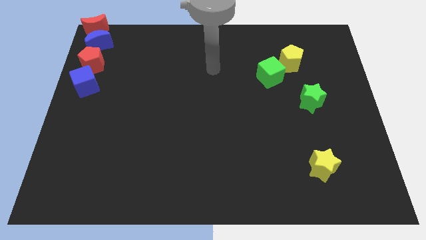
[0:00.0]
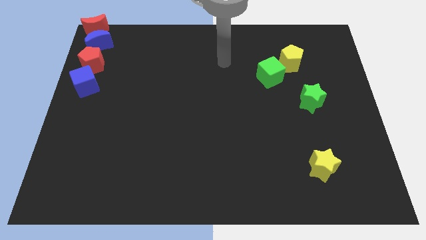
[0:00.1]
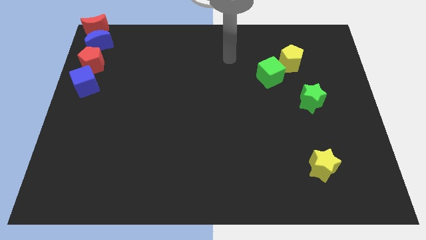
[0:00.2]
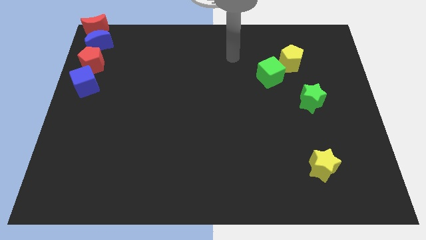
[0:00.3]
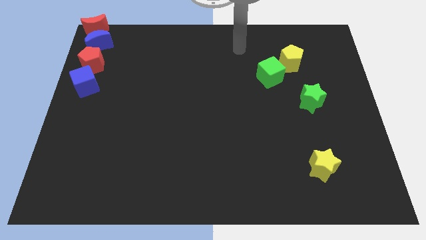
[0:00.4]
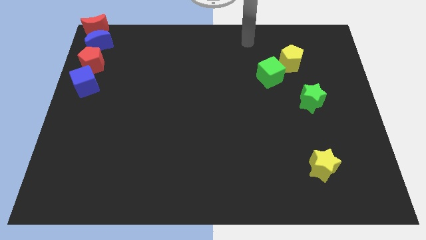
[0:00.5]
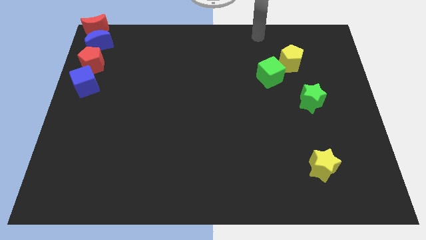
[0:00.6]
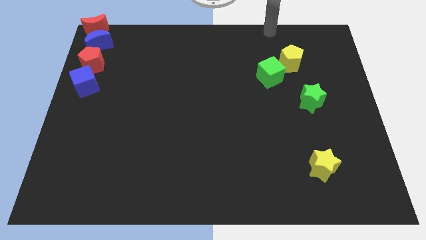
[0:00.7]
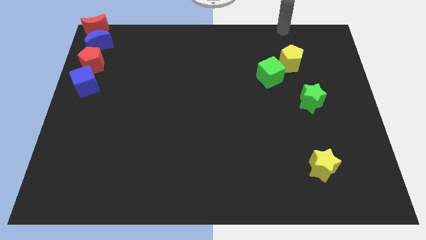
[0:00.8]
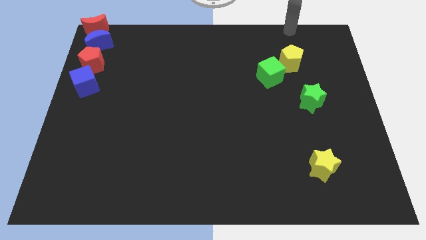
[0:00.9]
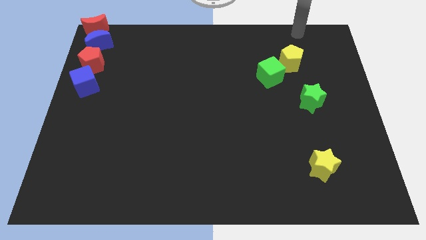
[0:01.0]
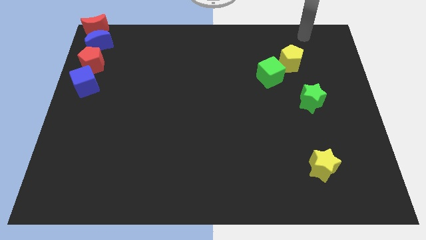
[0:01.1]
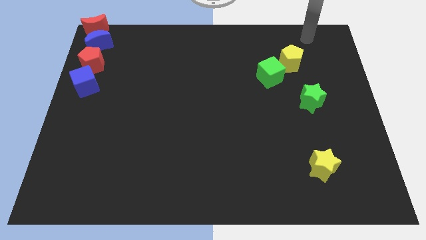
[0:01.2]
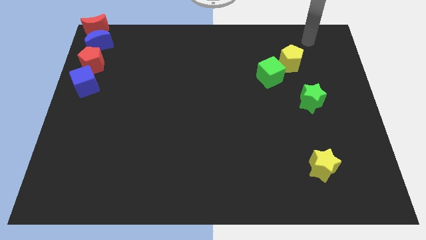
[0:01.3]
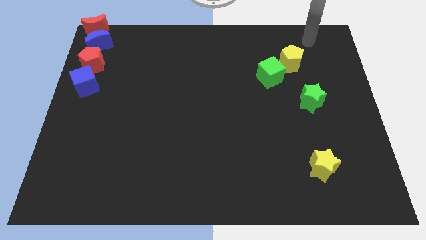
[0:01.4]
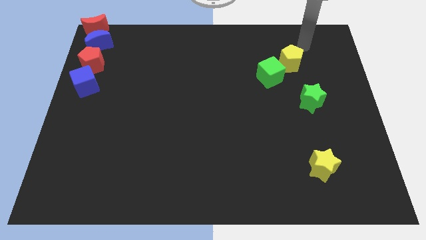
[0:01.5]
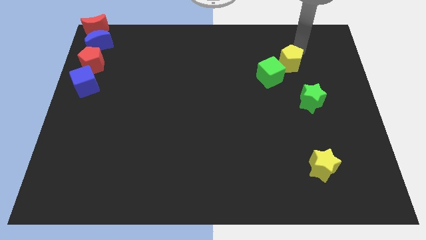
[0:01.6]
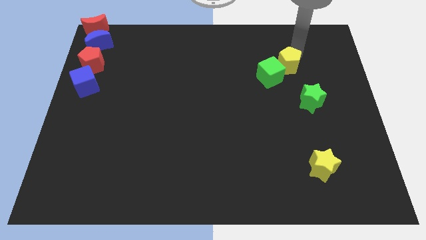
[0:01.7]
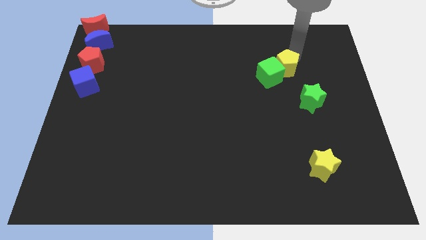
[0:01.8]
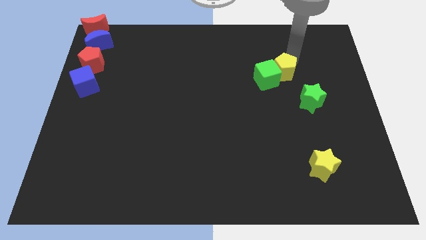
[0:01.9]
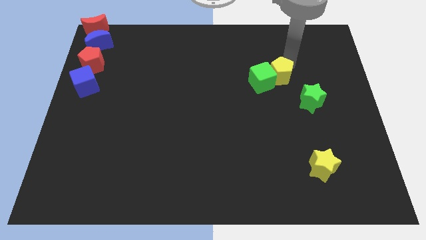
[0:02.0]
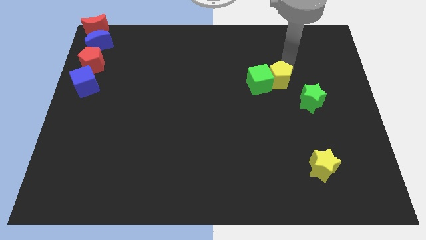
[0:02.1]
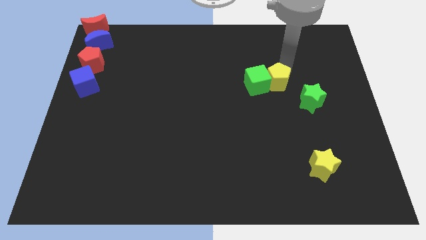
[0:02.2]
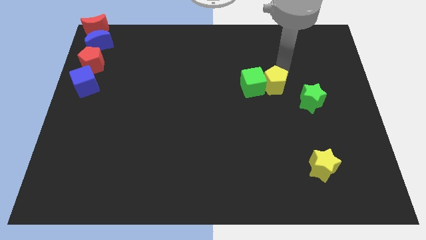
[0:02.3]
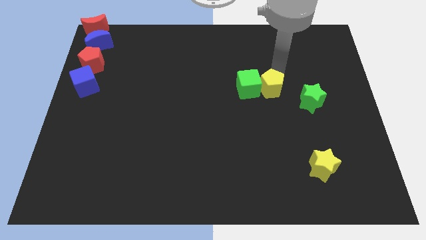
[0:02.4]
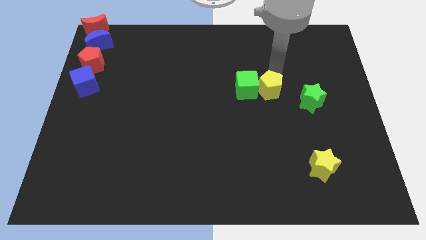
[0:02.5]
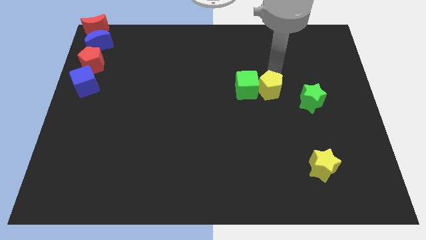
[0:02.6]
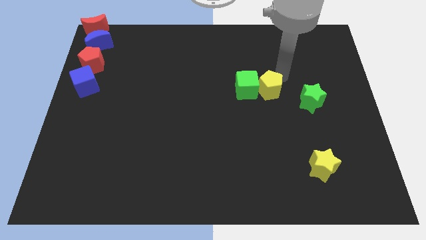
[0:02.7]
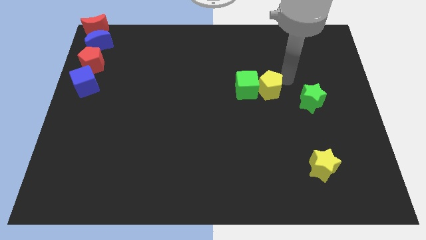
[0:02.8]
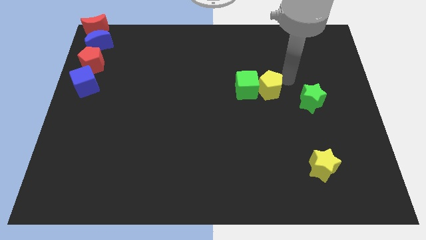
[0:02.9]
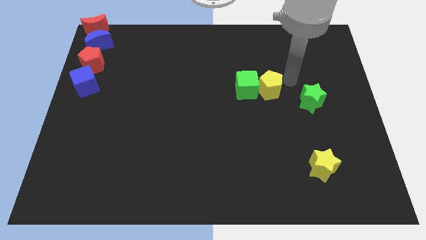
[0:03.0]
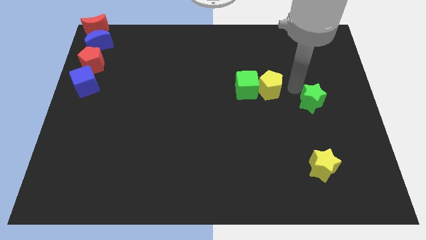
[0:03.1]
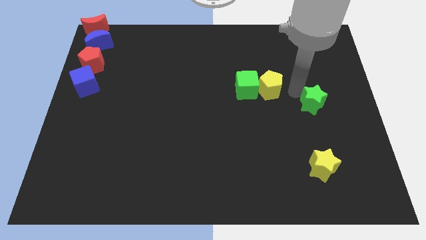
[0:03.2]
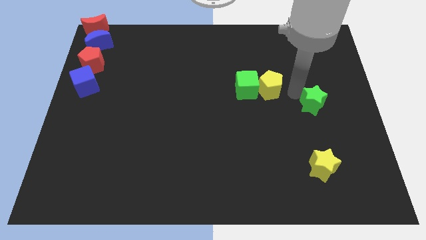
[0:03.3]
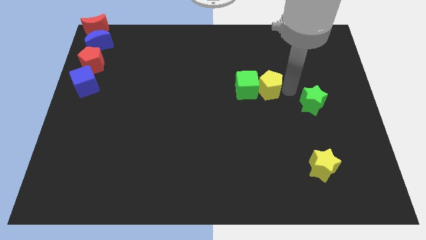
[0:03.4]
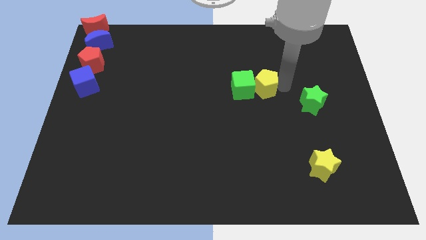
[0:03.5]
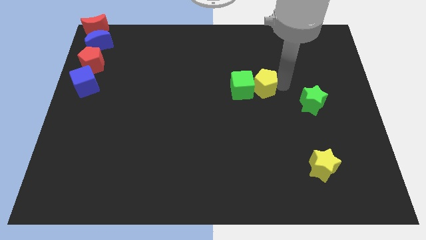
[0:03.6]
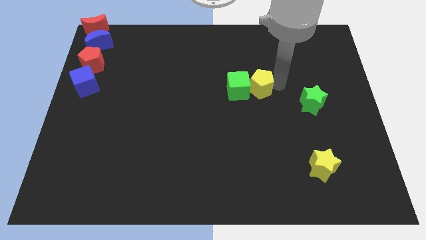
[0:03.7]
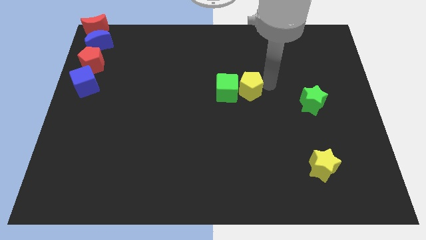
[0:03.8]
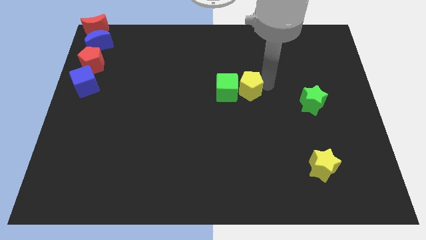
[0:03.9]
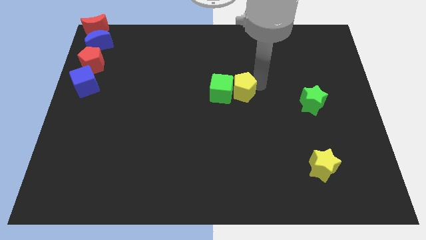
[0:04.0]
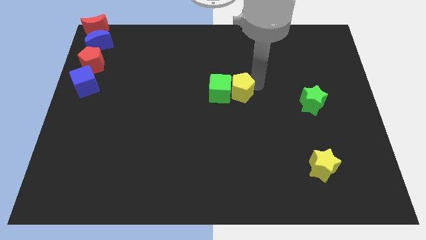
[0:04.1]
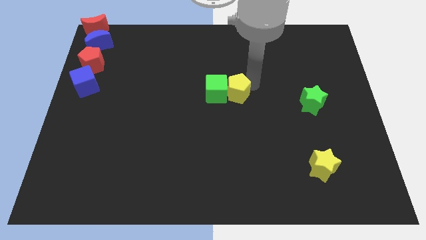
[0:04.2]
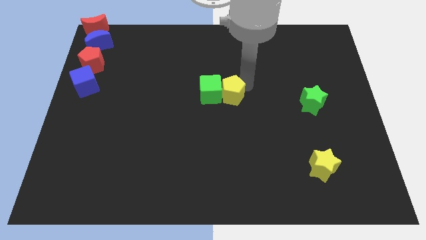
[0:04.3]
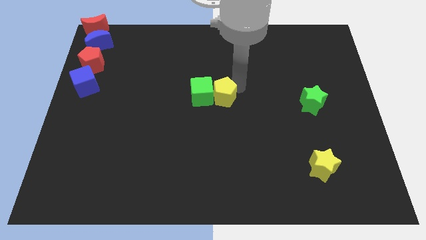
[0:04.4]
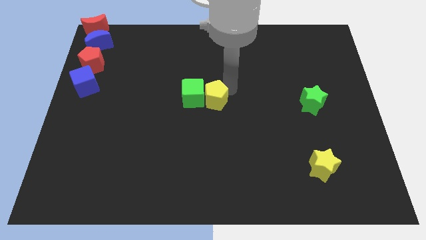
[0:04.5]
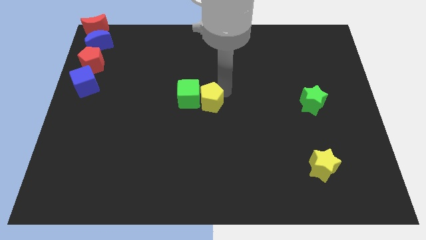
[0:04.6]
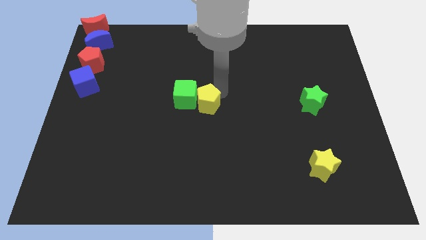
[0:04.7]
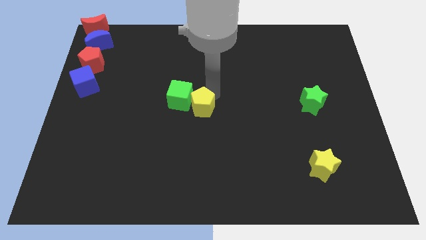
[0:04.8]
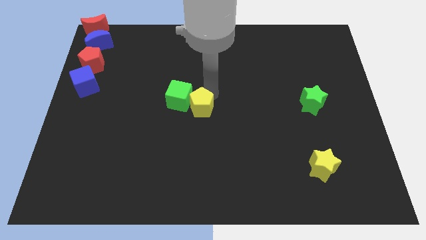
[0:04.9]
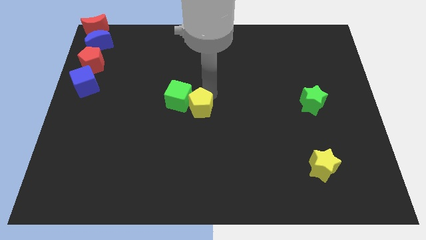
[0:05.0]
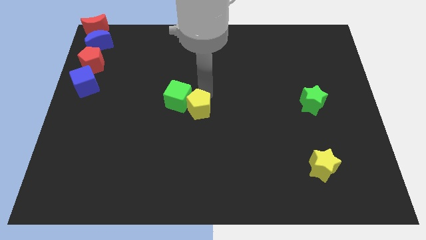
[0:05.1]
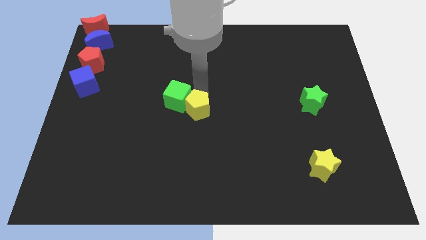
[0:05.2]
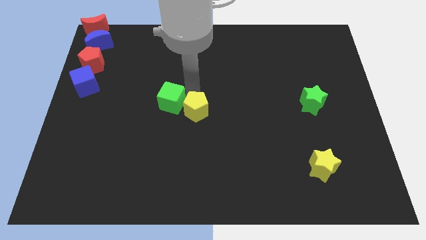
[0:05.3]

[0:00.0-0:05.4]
push green cube to its left with yellow pentagon

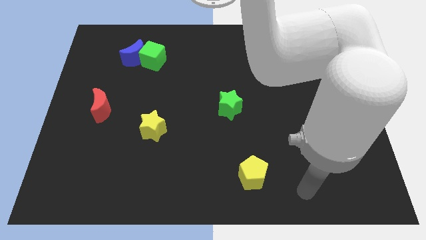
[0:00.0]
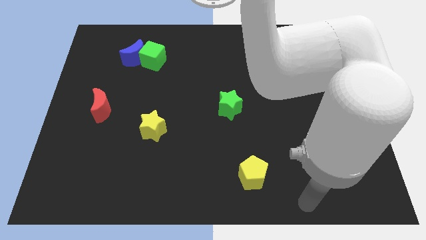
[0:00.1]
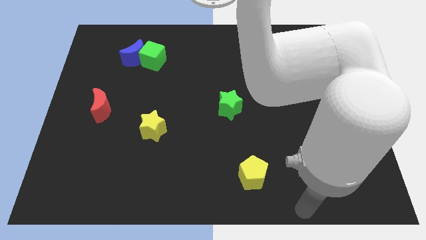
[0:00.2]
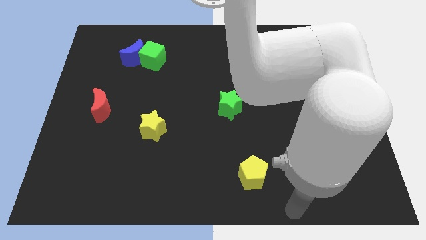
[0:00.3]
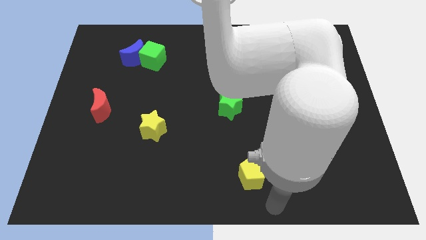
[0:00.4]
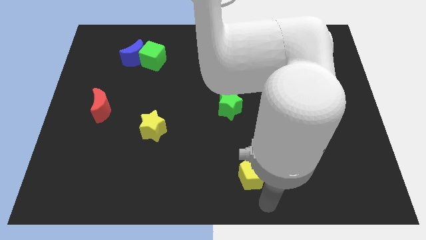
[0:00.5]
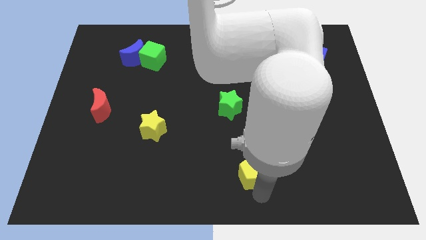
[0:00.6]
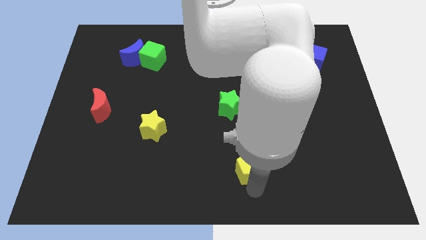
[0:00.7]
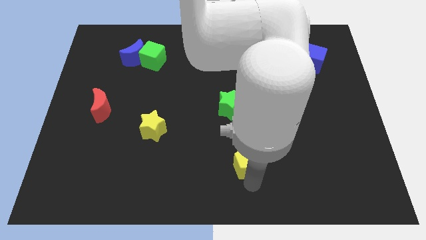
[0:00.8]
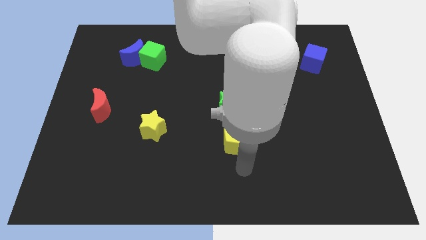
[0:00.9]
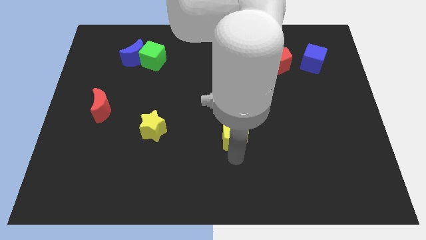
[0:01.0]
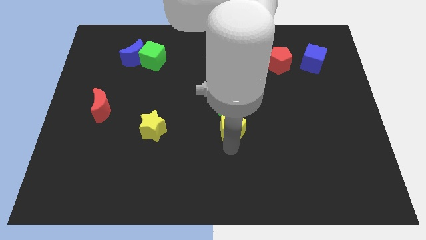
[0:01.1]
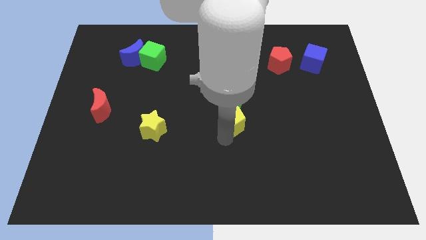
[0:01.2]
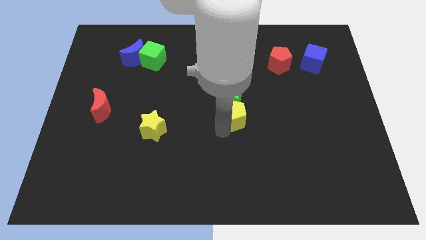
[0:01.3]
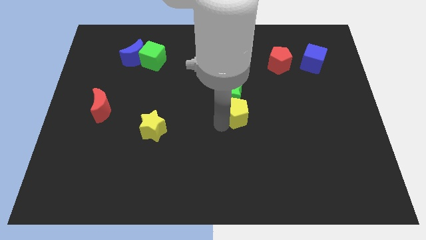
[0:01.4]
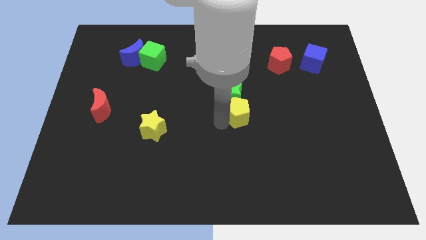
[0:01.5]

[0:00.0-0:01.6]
move the yellow pentagon into the bottom side of the green star

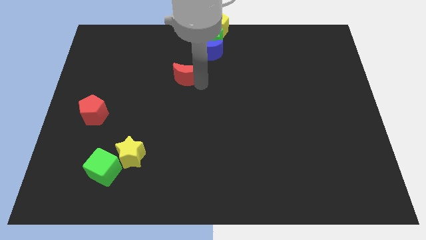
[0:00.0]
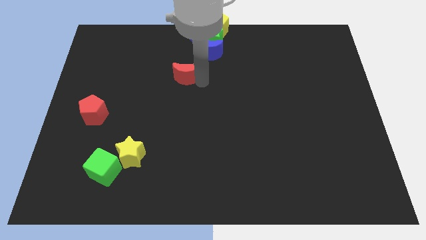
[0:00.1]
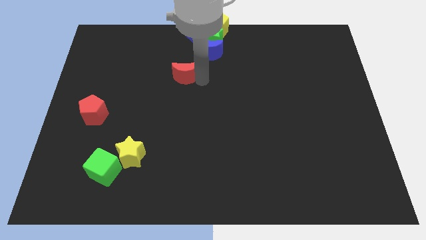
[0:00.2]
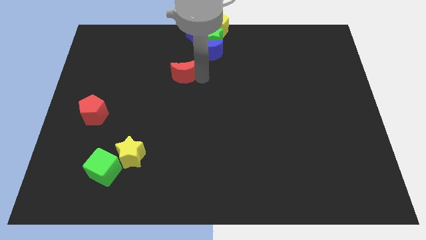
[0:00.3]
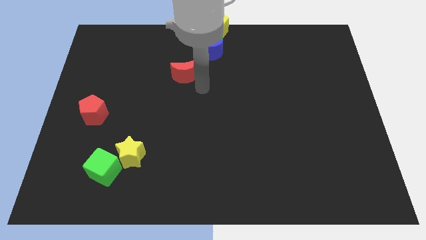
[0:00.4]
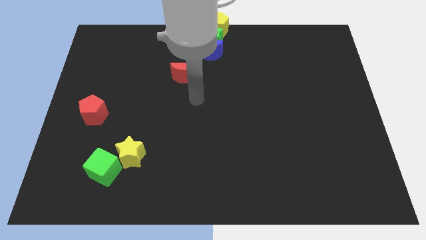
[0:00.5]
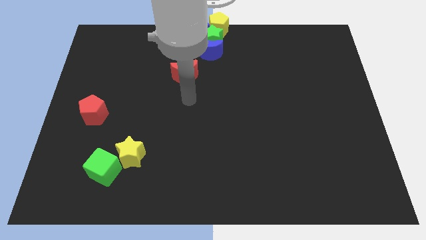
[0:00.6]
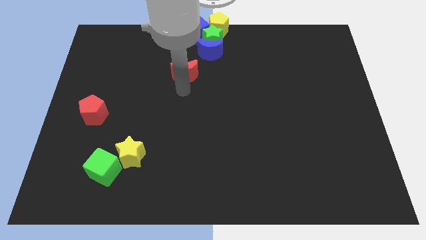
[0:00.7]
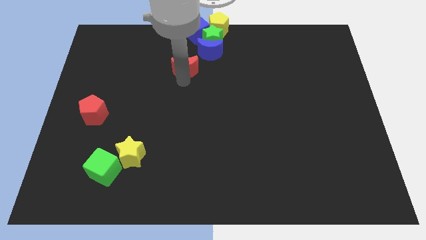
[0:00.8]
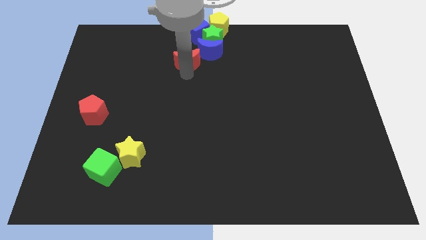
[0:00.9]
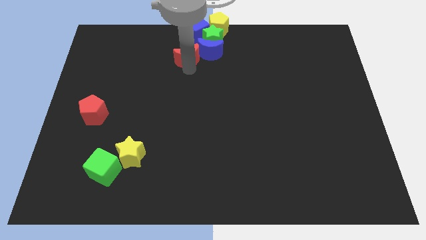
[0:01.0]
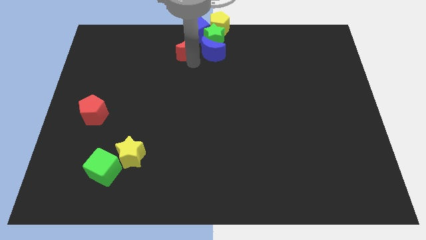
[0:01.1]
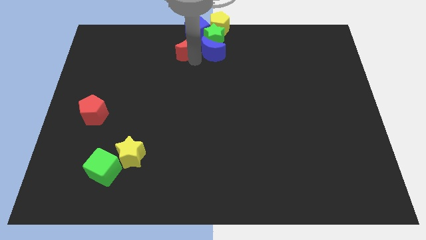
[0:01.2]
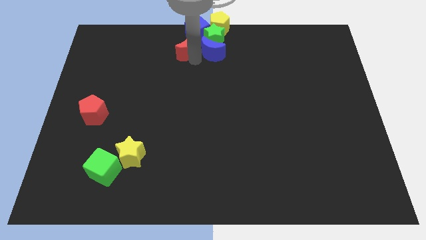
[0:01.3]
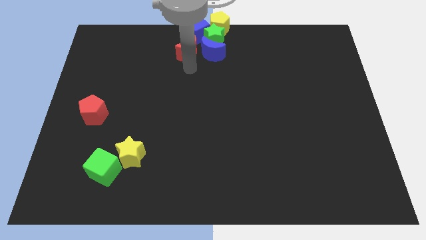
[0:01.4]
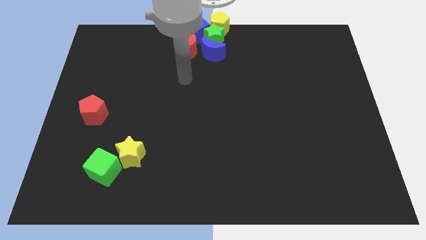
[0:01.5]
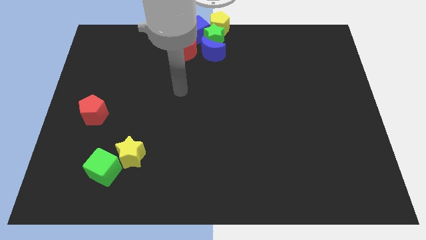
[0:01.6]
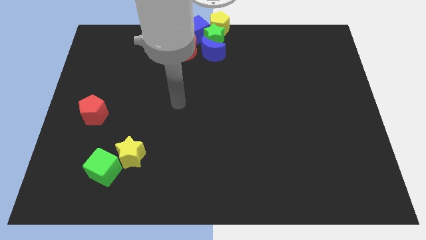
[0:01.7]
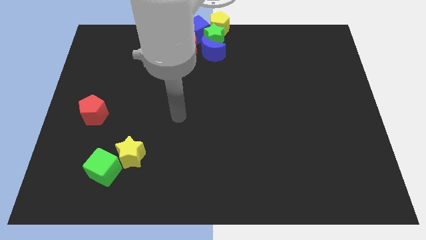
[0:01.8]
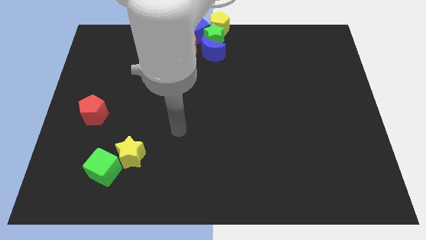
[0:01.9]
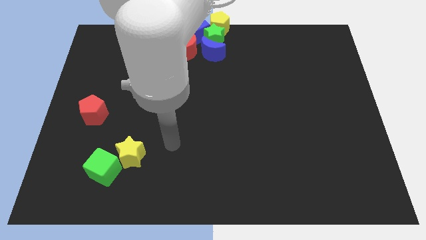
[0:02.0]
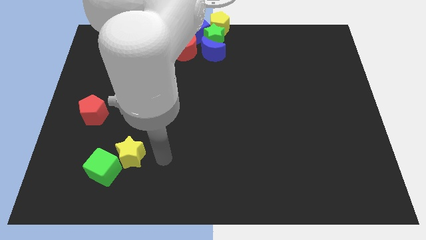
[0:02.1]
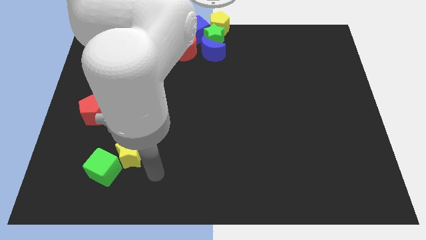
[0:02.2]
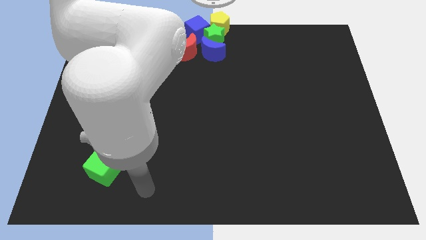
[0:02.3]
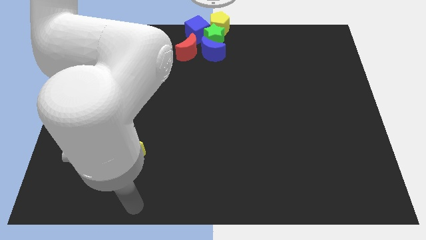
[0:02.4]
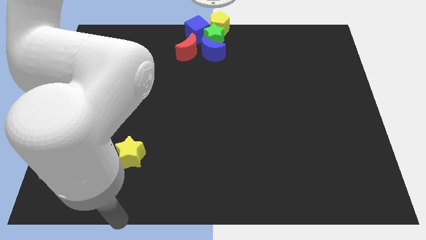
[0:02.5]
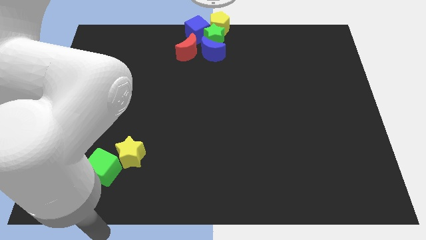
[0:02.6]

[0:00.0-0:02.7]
place the red crescent below the blue cube
